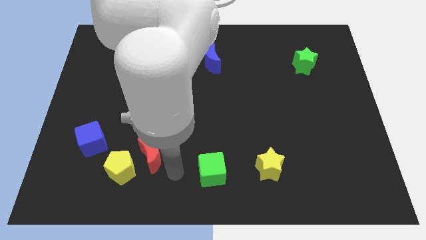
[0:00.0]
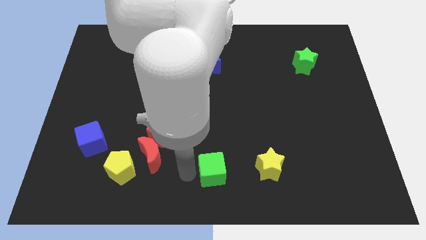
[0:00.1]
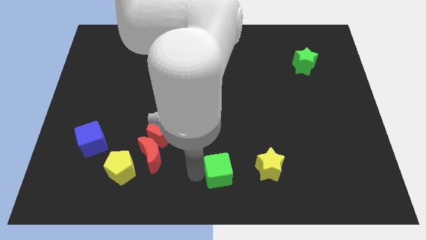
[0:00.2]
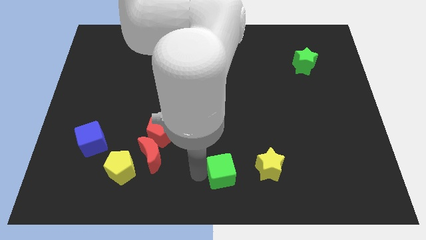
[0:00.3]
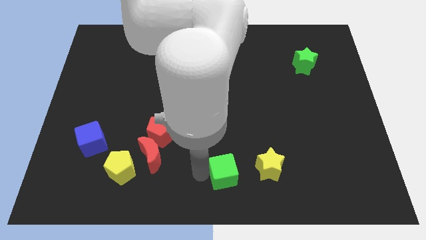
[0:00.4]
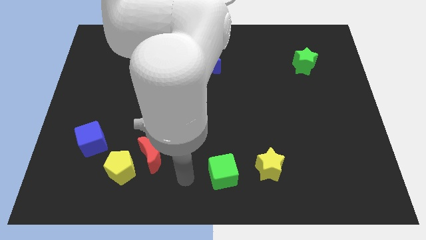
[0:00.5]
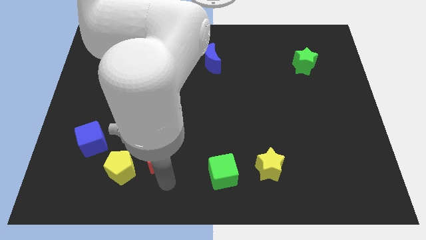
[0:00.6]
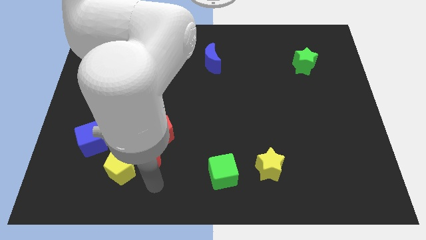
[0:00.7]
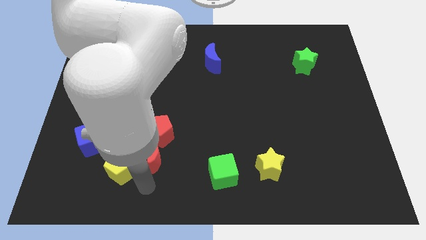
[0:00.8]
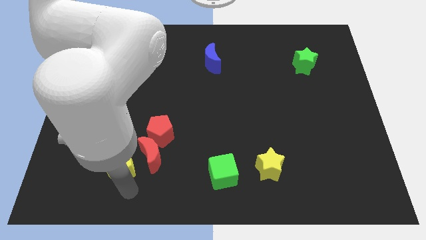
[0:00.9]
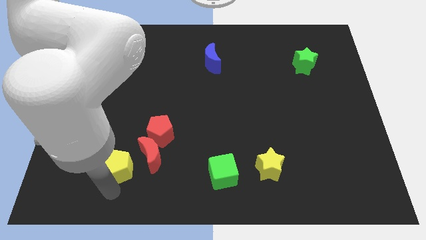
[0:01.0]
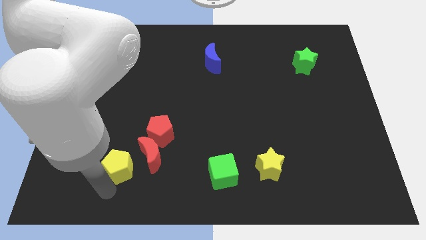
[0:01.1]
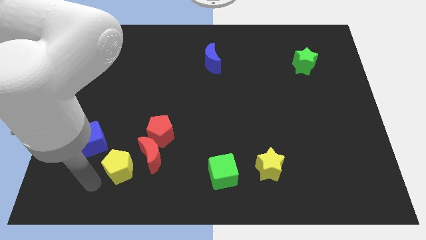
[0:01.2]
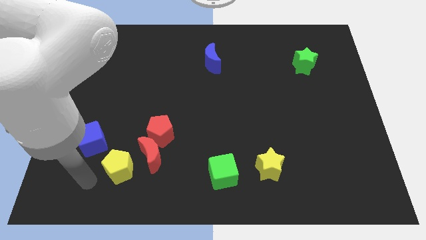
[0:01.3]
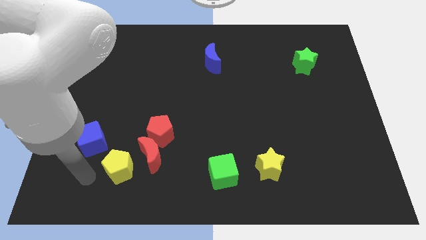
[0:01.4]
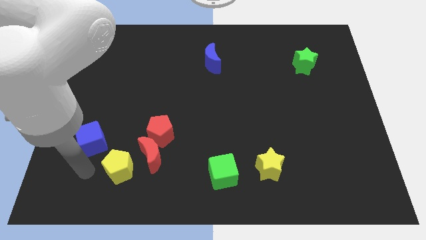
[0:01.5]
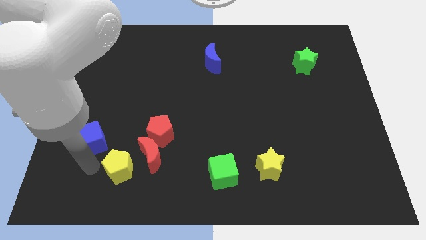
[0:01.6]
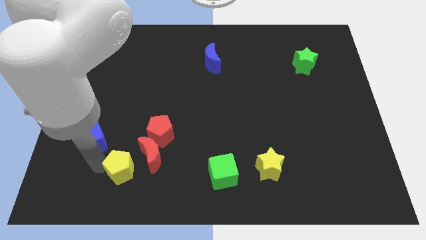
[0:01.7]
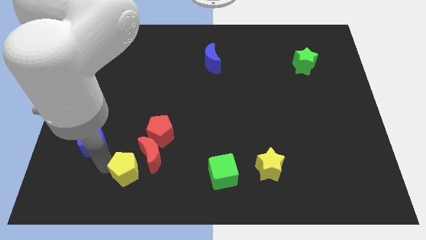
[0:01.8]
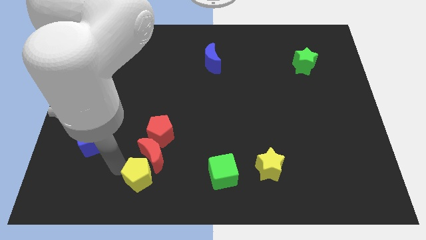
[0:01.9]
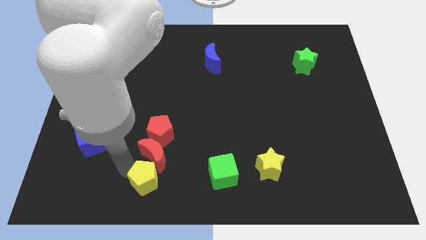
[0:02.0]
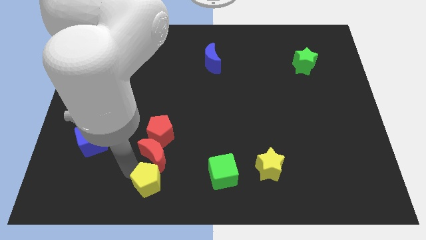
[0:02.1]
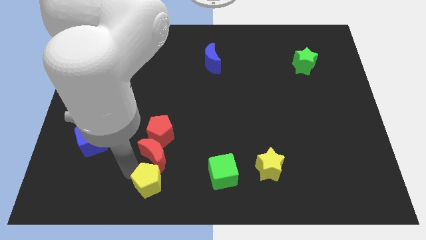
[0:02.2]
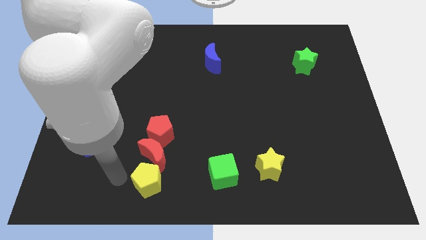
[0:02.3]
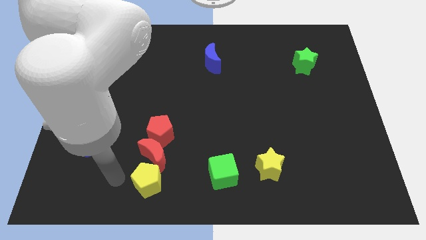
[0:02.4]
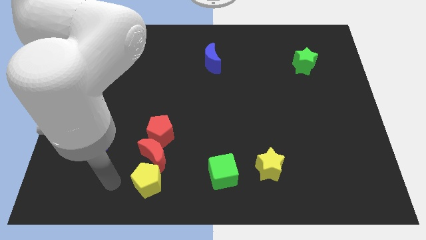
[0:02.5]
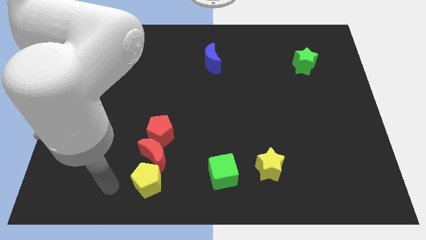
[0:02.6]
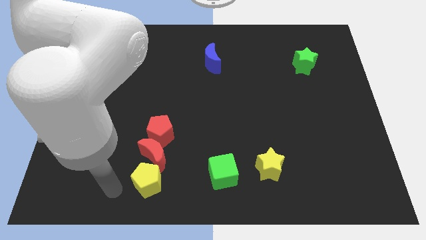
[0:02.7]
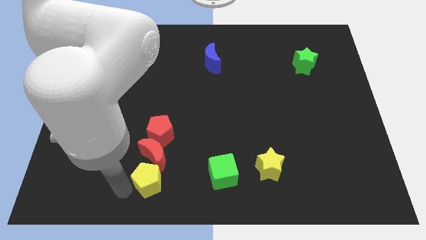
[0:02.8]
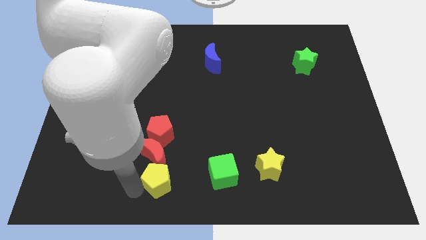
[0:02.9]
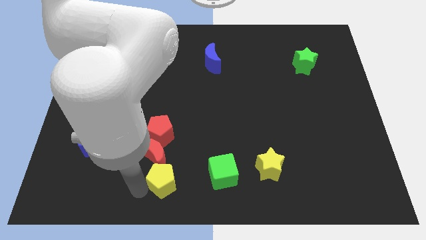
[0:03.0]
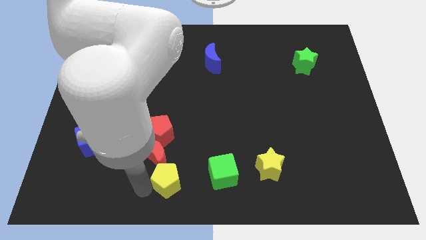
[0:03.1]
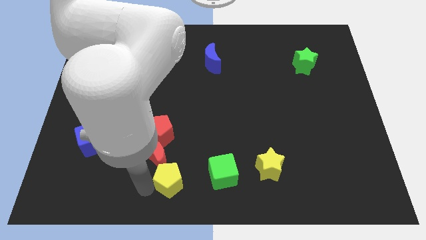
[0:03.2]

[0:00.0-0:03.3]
place the yellow pentagon below the red moon

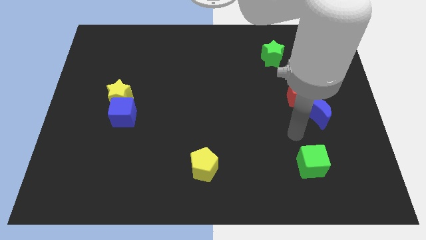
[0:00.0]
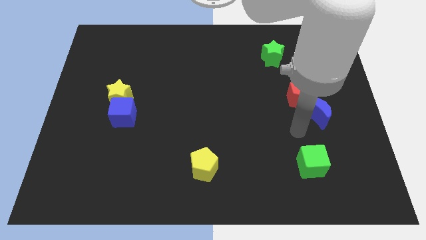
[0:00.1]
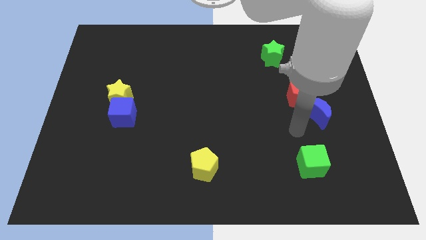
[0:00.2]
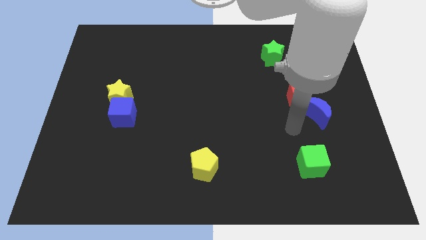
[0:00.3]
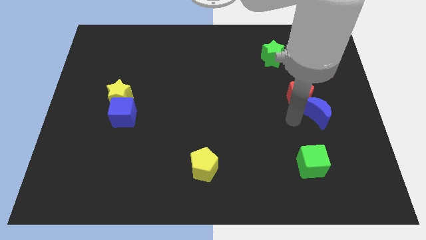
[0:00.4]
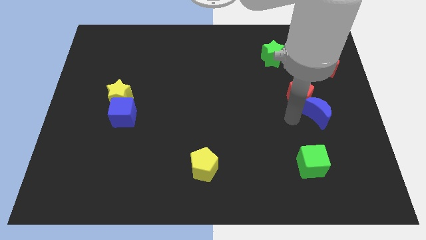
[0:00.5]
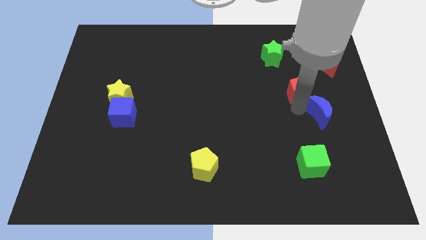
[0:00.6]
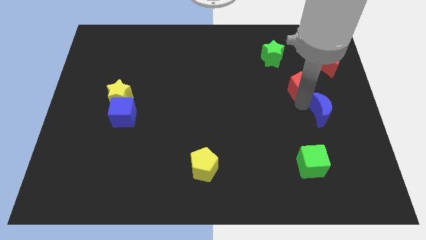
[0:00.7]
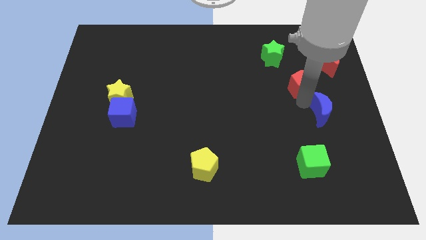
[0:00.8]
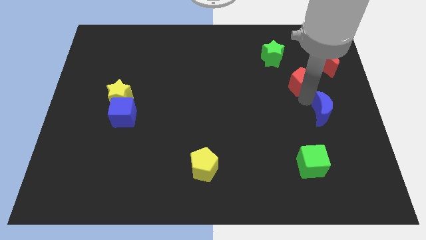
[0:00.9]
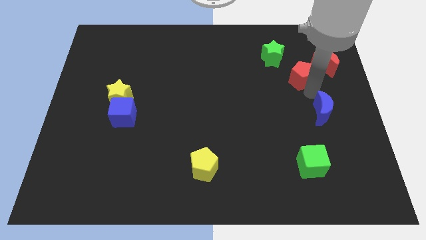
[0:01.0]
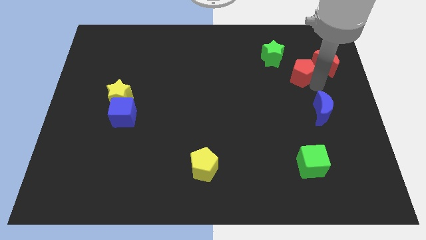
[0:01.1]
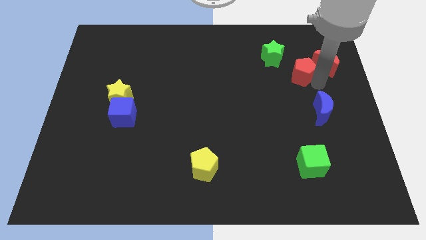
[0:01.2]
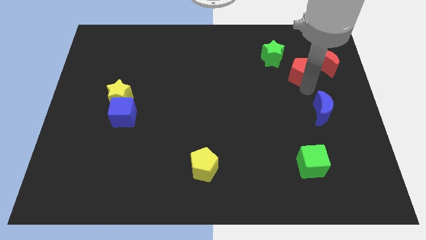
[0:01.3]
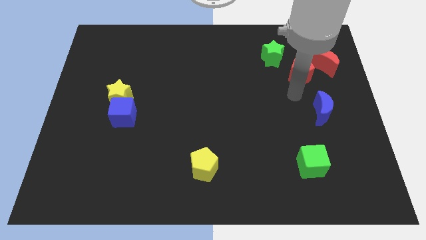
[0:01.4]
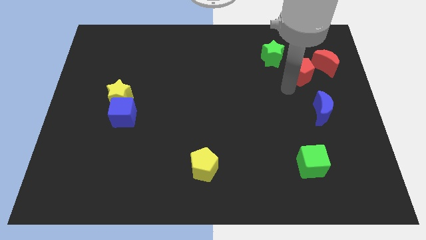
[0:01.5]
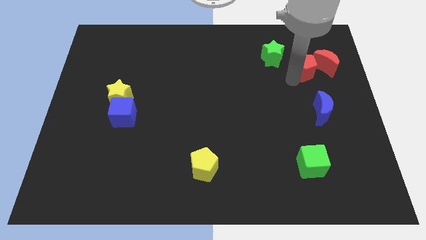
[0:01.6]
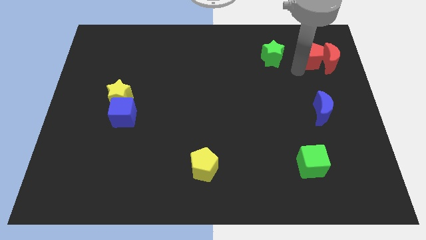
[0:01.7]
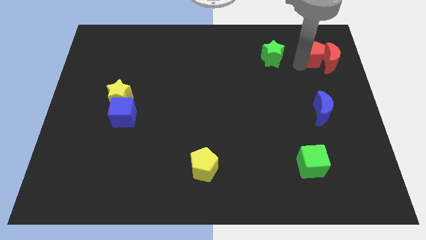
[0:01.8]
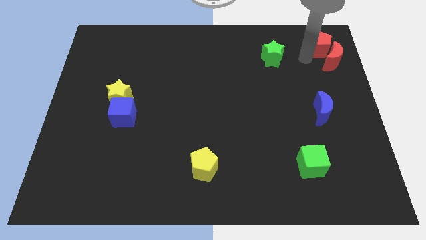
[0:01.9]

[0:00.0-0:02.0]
push the red pentagon into the red moon

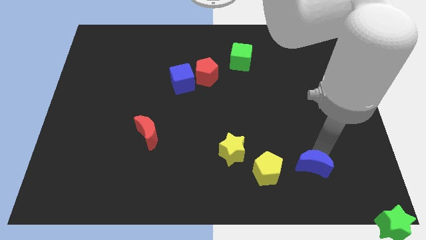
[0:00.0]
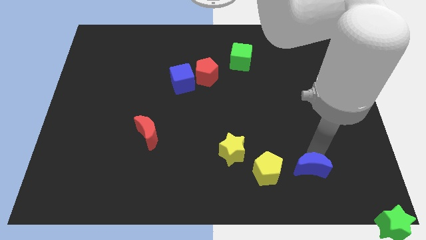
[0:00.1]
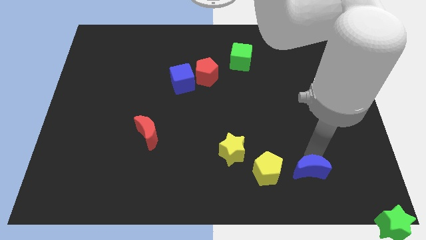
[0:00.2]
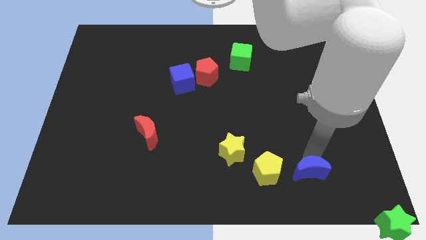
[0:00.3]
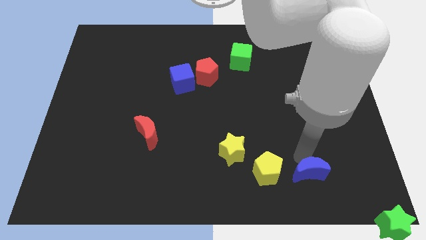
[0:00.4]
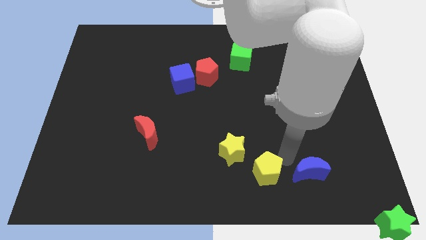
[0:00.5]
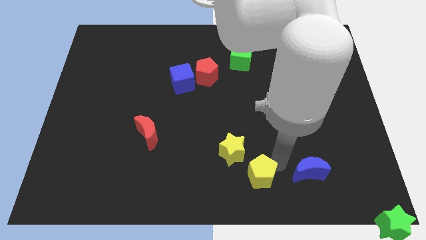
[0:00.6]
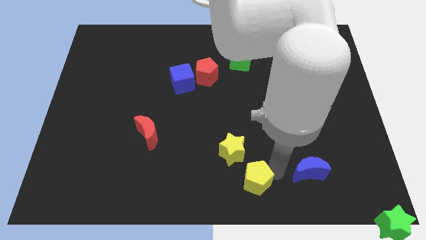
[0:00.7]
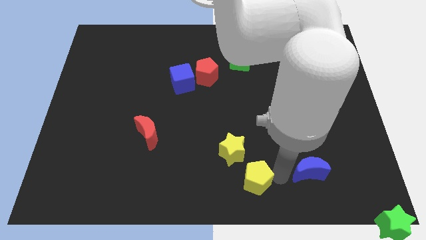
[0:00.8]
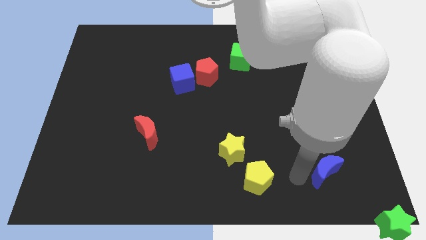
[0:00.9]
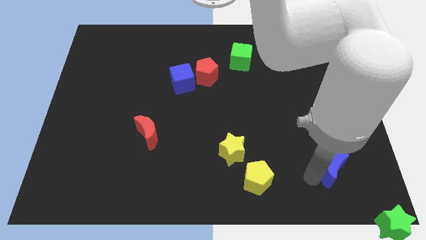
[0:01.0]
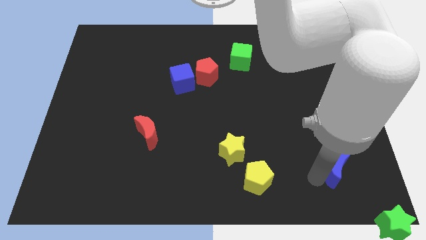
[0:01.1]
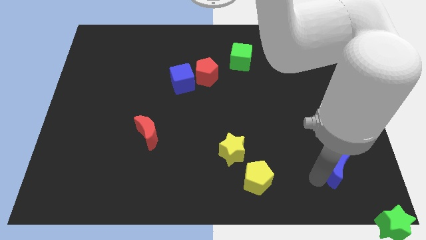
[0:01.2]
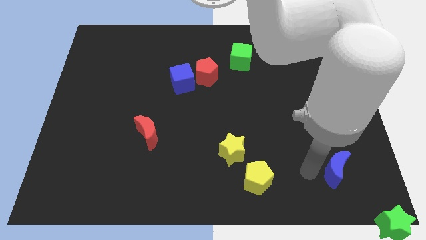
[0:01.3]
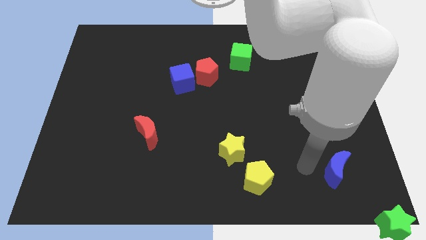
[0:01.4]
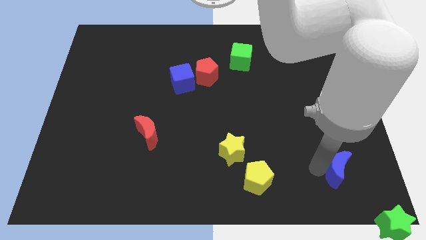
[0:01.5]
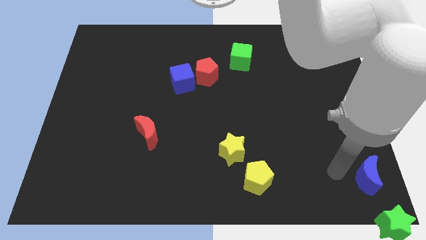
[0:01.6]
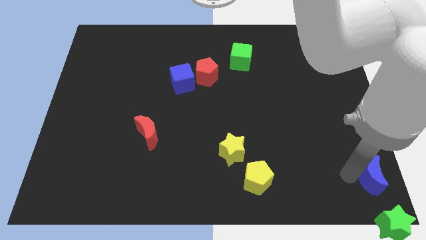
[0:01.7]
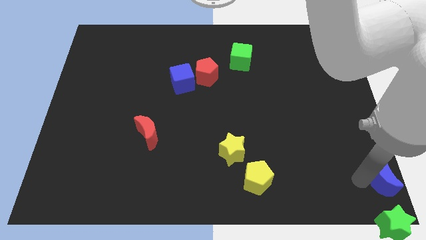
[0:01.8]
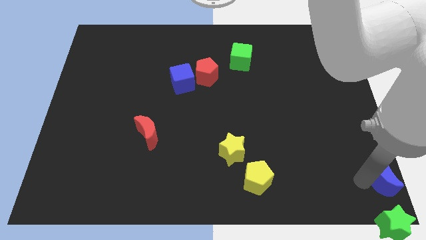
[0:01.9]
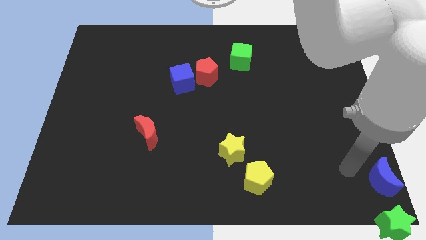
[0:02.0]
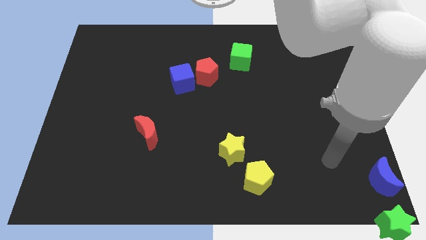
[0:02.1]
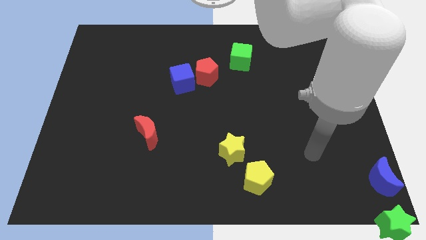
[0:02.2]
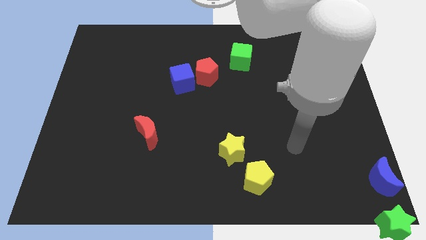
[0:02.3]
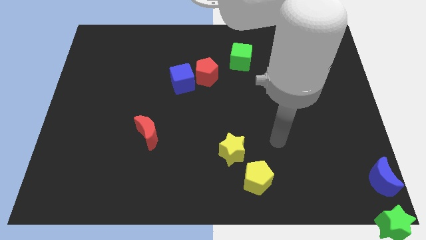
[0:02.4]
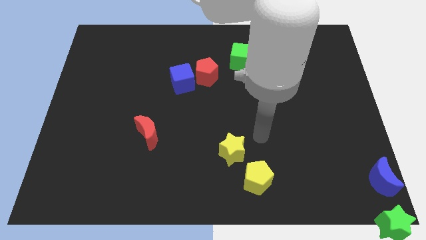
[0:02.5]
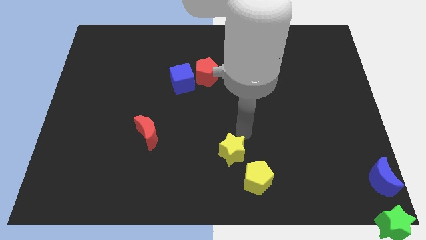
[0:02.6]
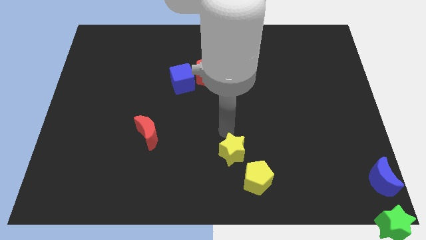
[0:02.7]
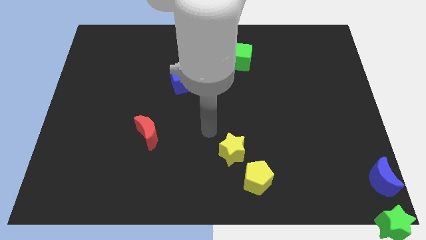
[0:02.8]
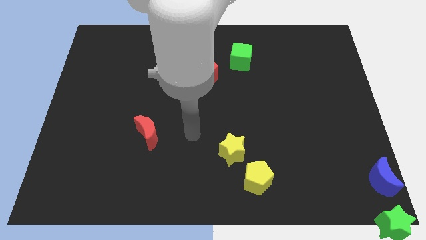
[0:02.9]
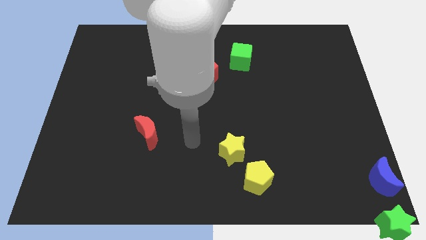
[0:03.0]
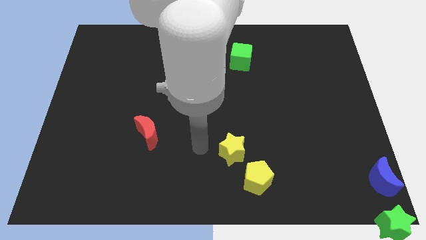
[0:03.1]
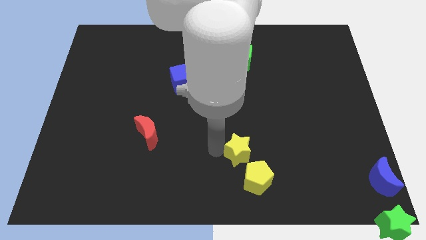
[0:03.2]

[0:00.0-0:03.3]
put the blue moon to the top side of the green star

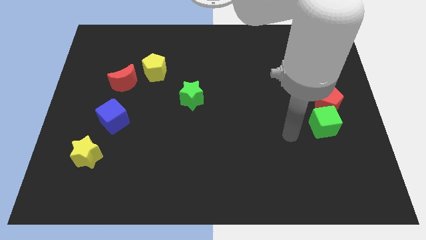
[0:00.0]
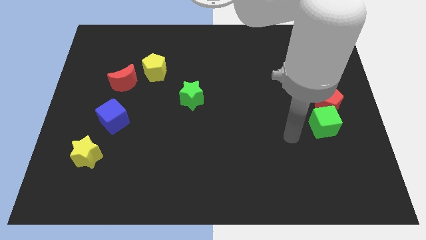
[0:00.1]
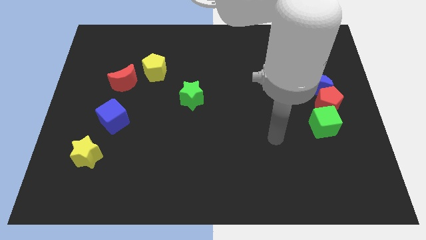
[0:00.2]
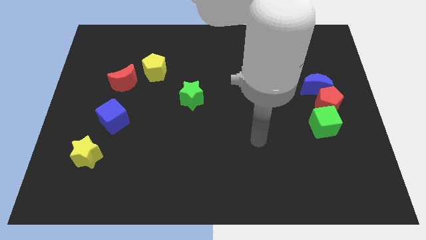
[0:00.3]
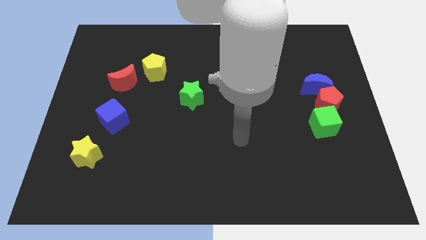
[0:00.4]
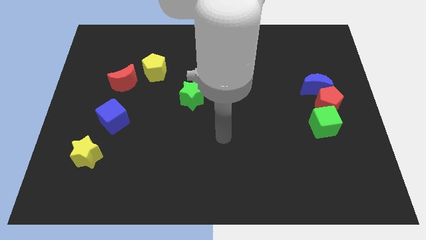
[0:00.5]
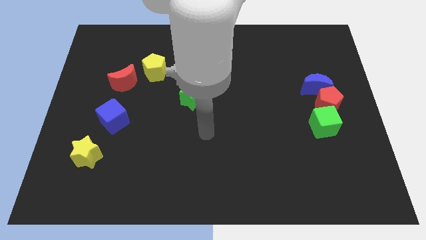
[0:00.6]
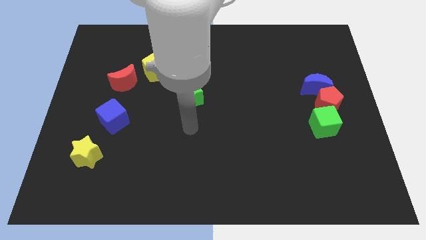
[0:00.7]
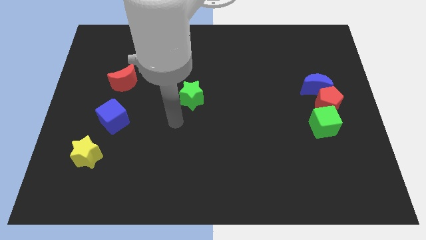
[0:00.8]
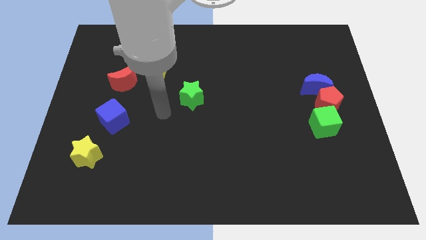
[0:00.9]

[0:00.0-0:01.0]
place arm near green
